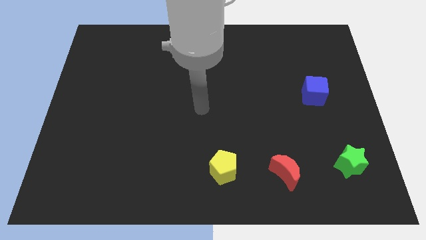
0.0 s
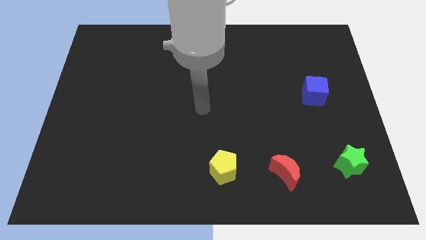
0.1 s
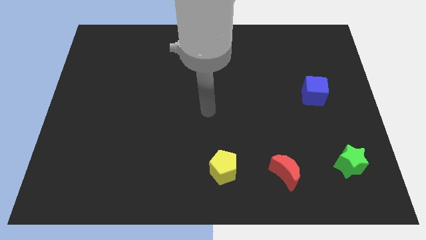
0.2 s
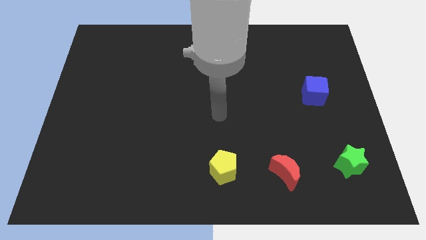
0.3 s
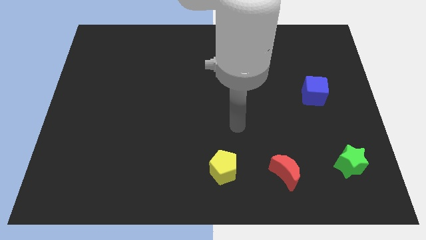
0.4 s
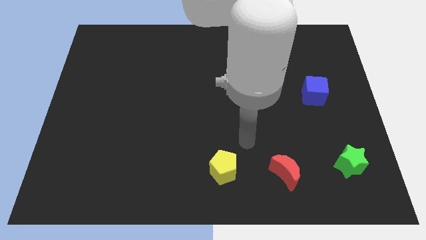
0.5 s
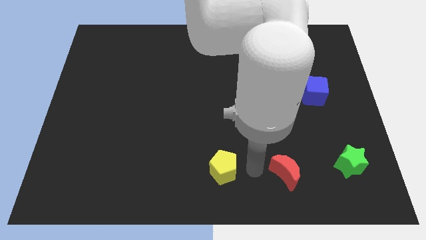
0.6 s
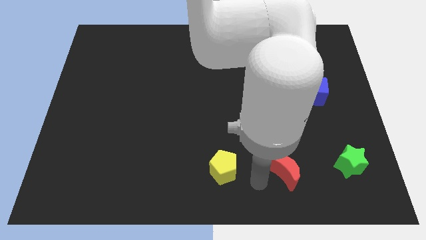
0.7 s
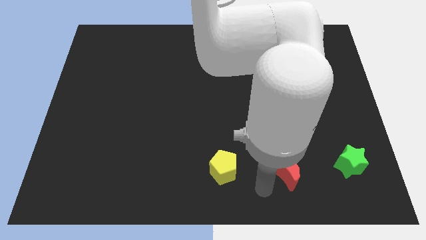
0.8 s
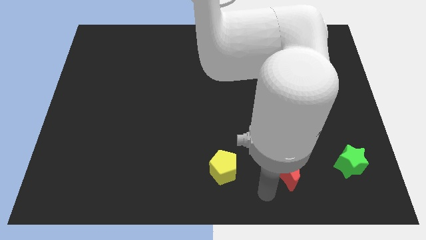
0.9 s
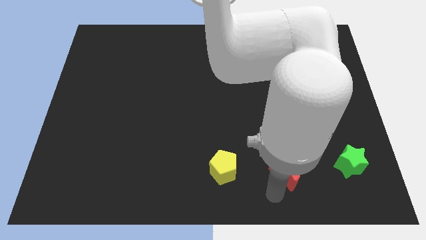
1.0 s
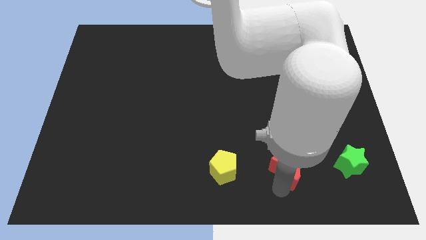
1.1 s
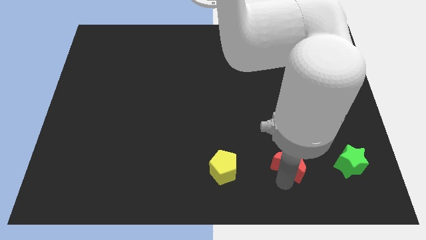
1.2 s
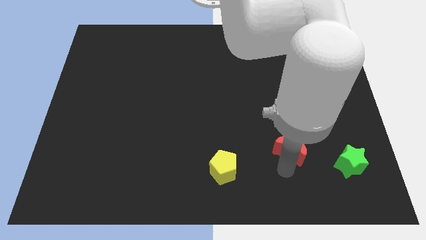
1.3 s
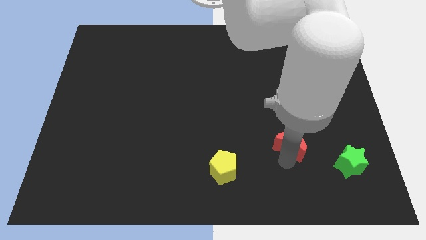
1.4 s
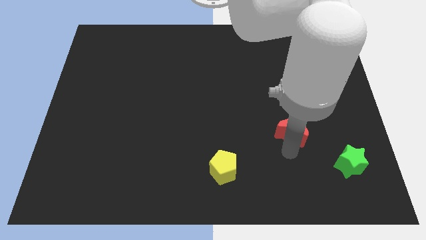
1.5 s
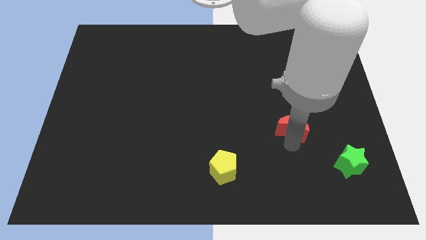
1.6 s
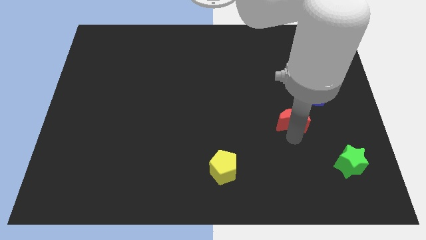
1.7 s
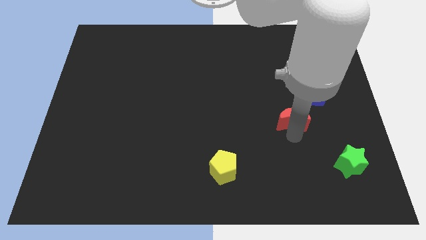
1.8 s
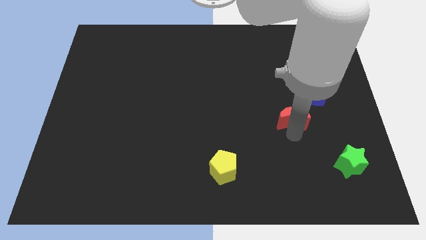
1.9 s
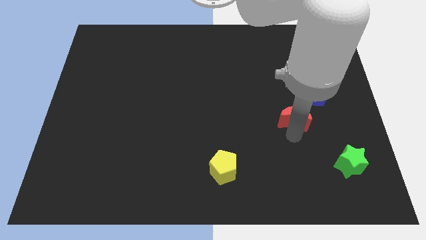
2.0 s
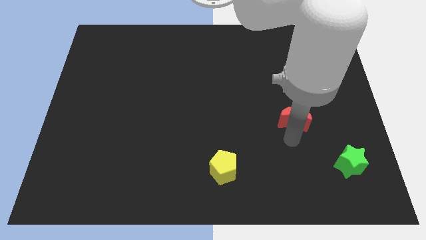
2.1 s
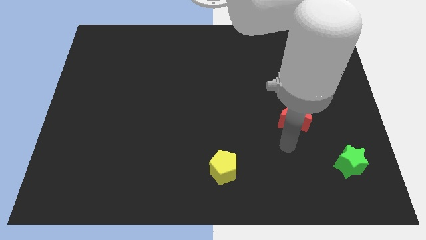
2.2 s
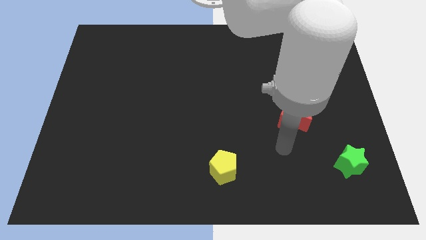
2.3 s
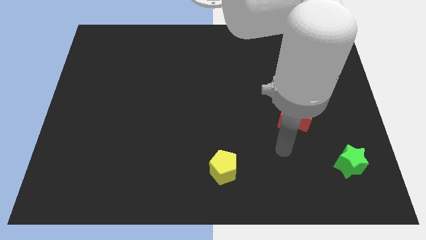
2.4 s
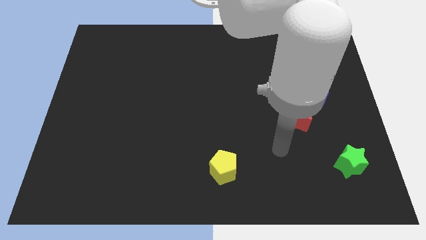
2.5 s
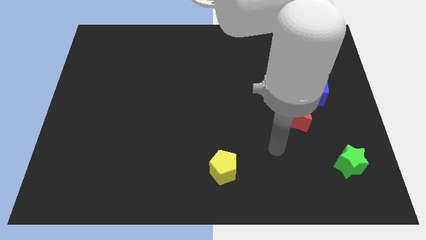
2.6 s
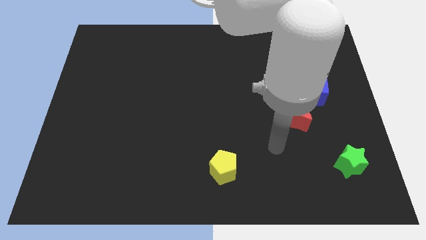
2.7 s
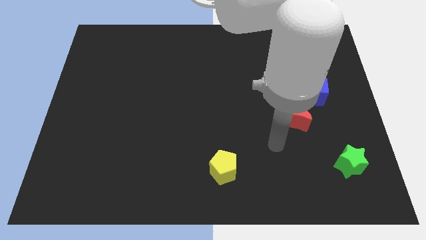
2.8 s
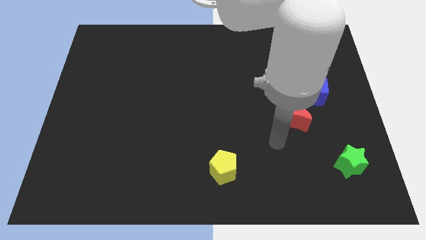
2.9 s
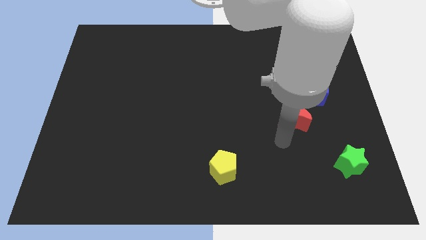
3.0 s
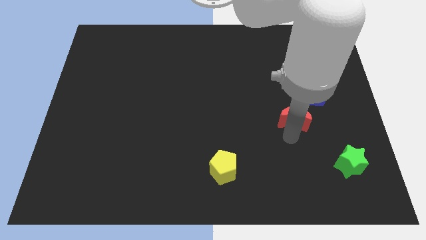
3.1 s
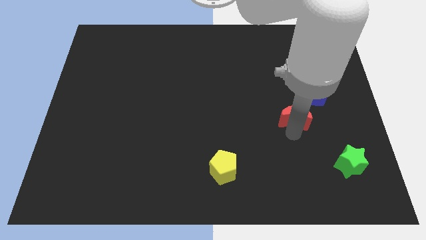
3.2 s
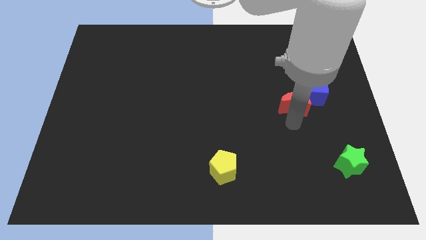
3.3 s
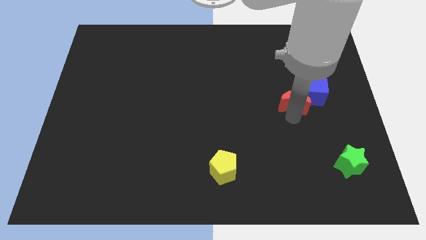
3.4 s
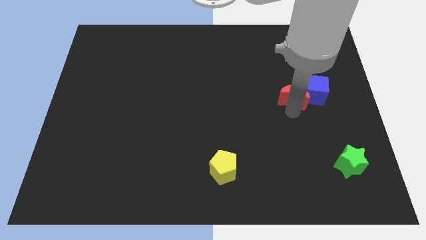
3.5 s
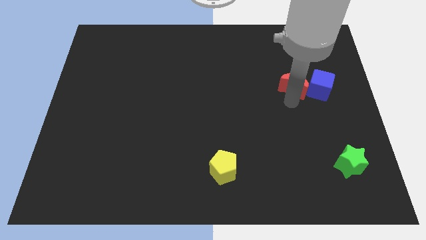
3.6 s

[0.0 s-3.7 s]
move the red block next to the blue block

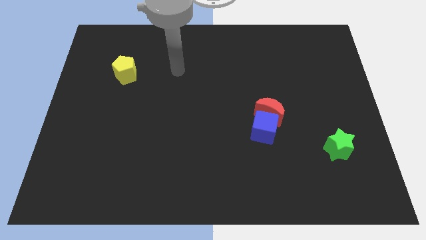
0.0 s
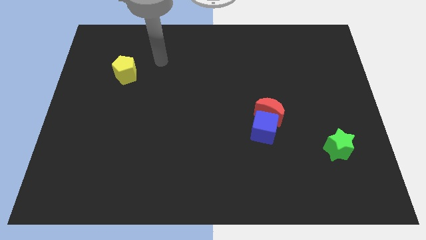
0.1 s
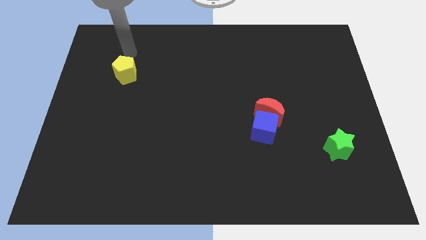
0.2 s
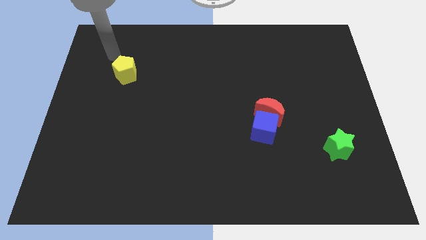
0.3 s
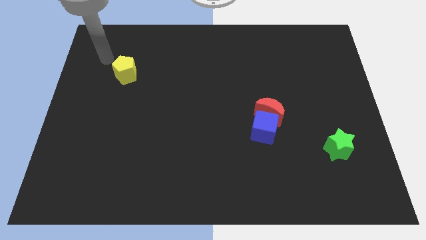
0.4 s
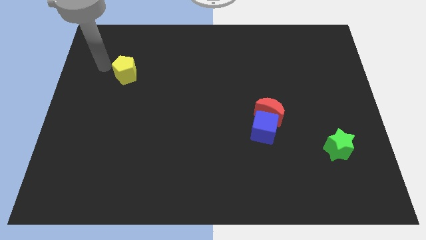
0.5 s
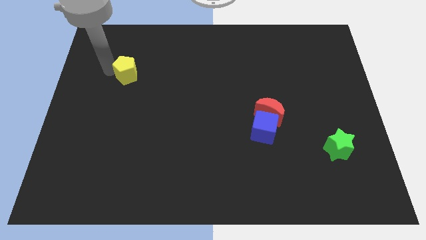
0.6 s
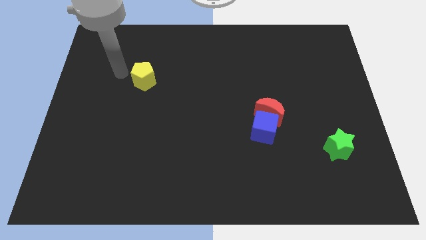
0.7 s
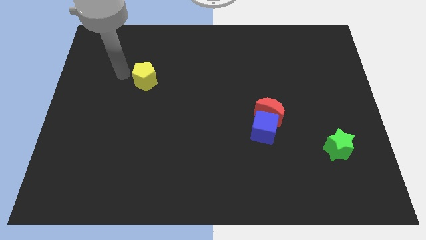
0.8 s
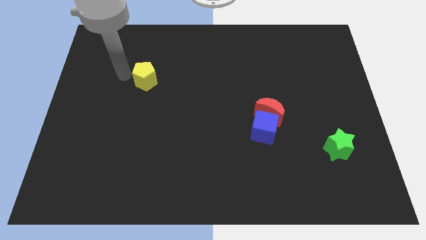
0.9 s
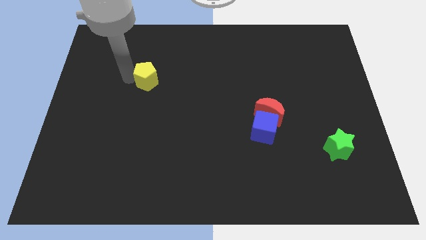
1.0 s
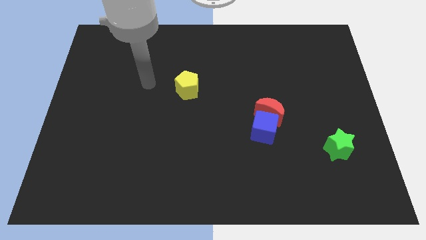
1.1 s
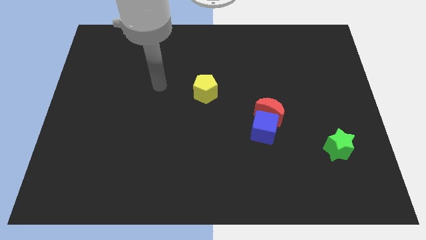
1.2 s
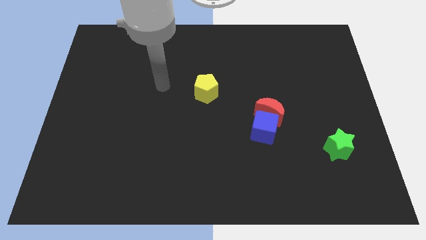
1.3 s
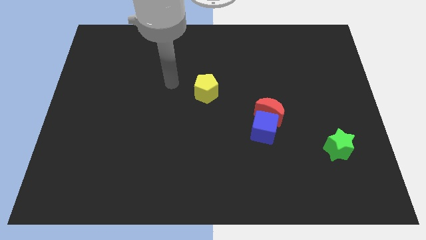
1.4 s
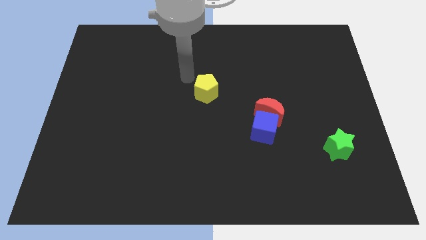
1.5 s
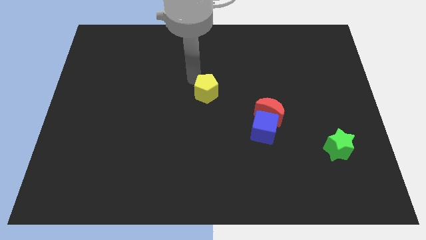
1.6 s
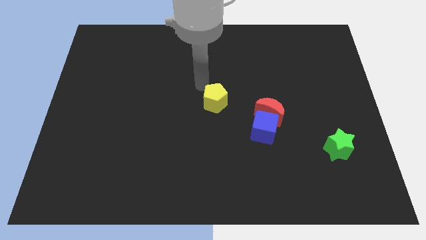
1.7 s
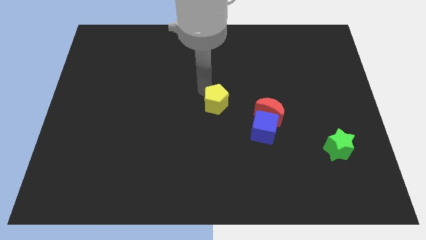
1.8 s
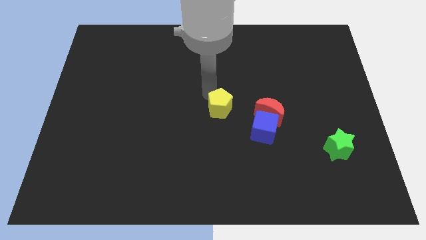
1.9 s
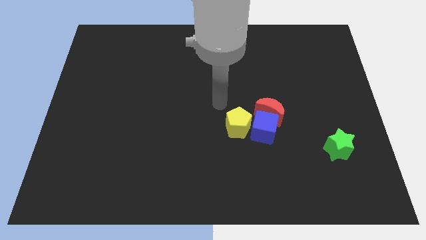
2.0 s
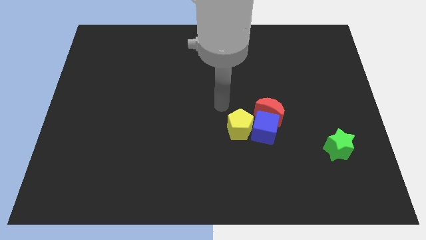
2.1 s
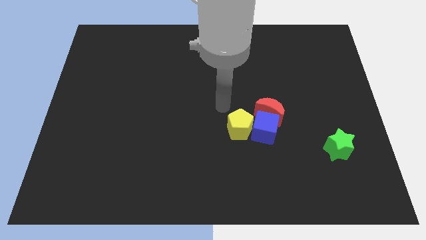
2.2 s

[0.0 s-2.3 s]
put the yellow block towards the cube

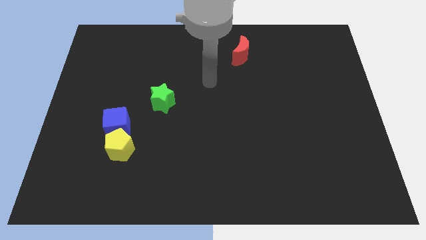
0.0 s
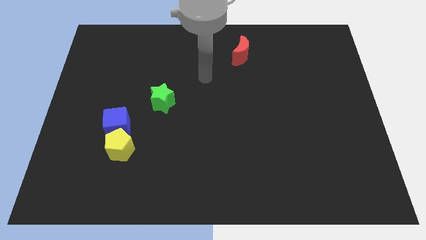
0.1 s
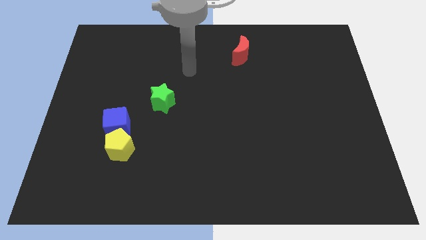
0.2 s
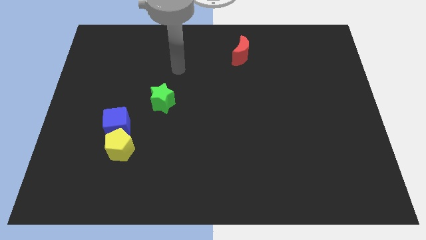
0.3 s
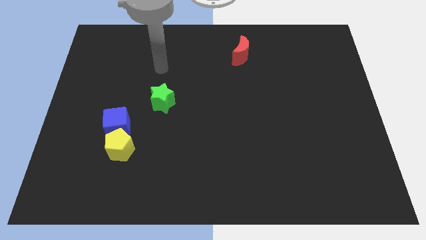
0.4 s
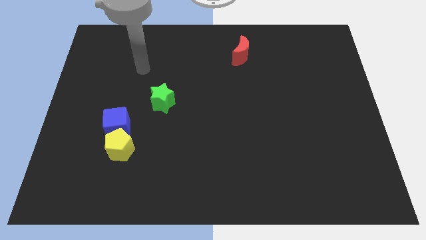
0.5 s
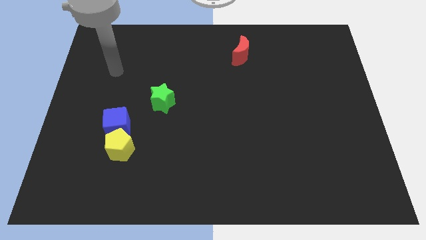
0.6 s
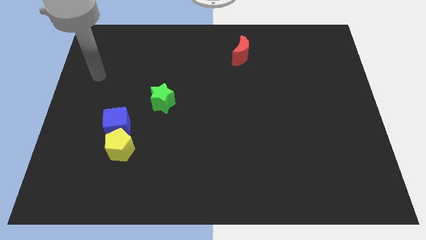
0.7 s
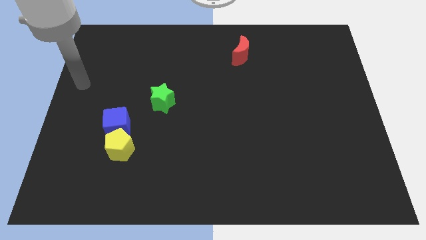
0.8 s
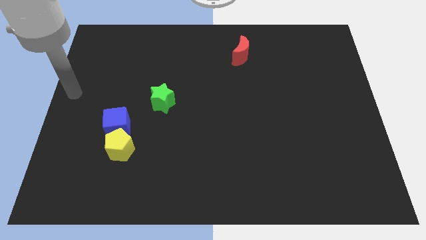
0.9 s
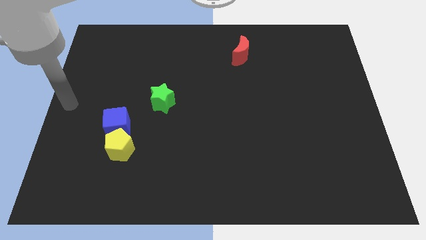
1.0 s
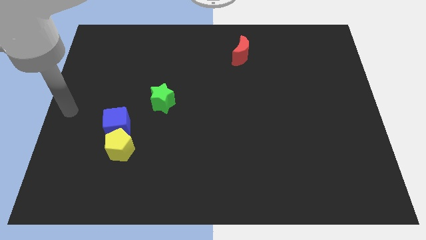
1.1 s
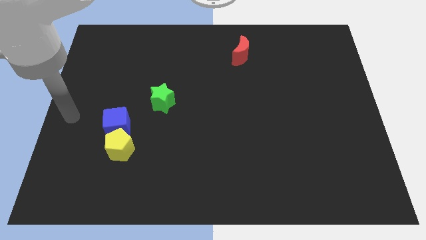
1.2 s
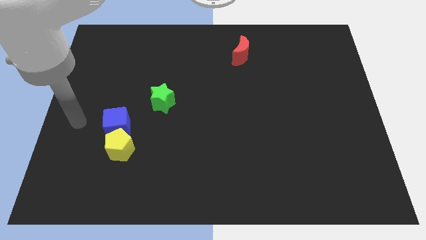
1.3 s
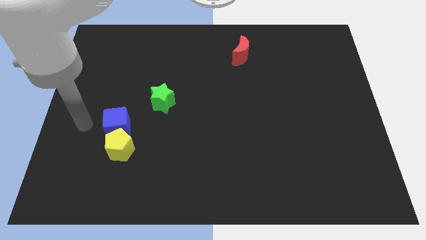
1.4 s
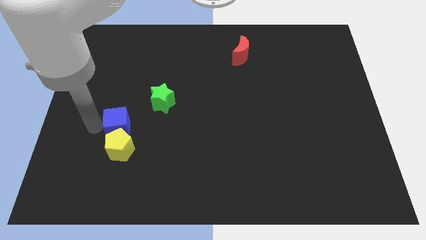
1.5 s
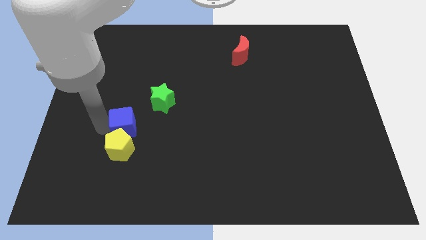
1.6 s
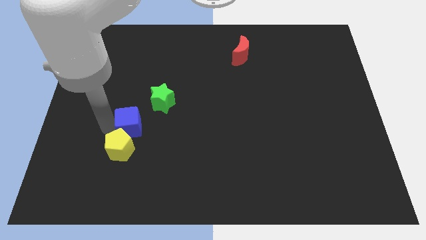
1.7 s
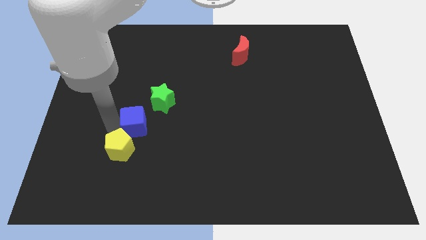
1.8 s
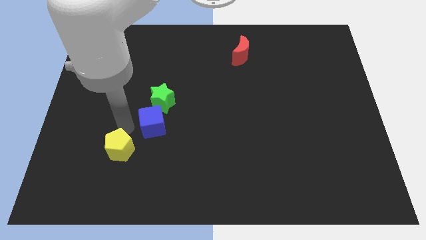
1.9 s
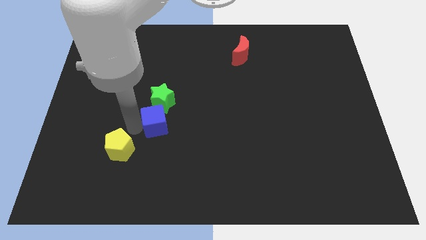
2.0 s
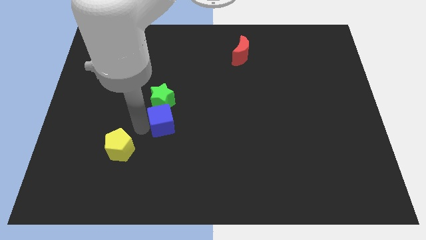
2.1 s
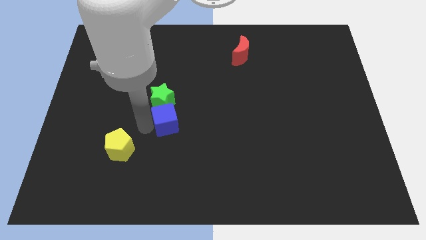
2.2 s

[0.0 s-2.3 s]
move the blue cube towards the star
